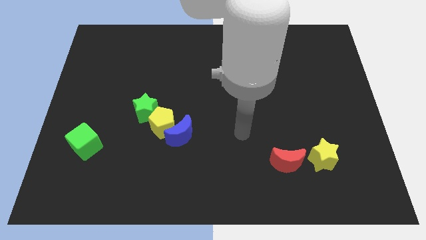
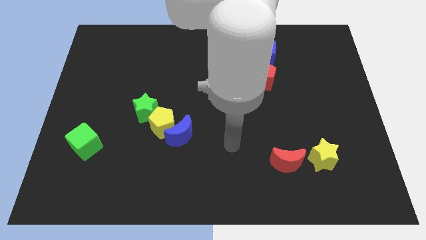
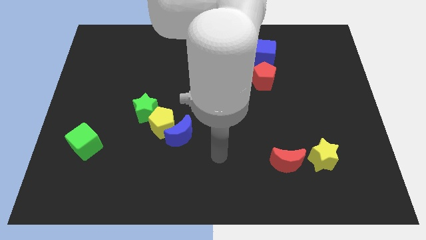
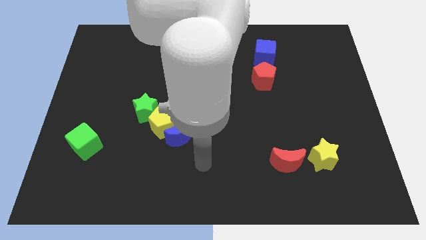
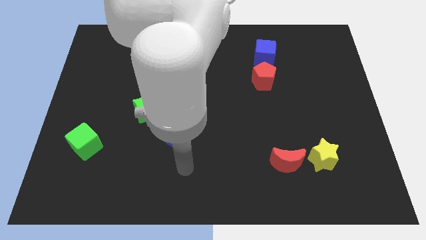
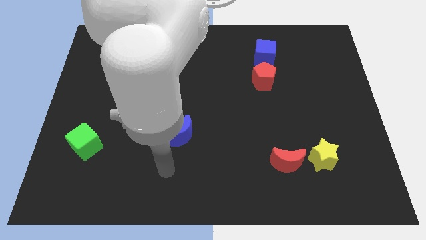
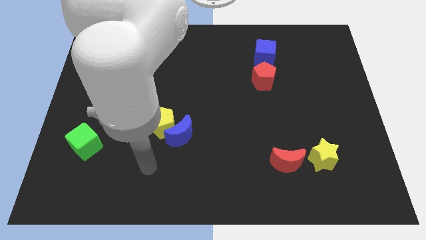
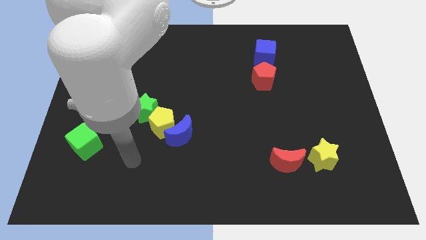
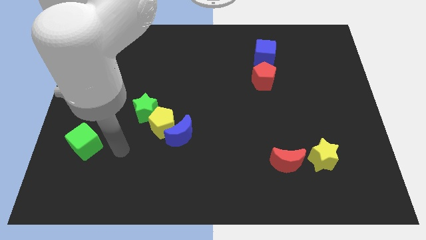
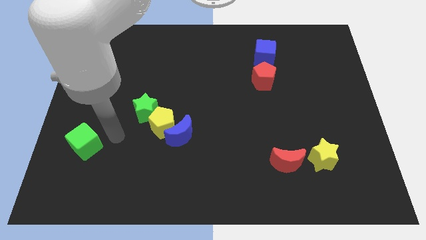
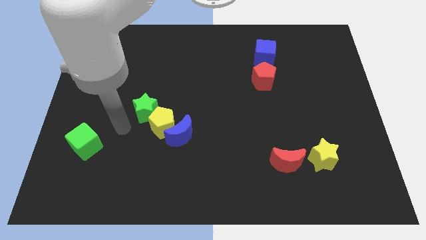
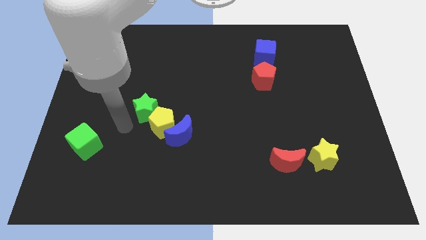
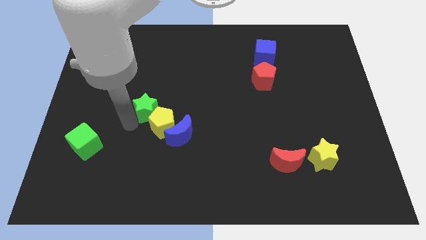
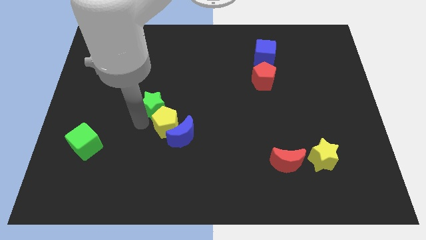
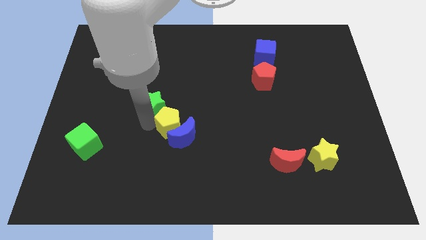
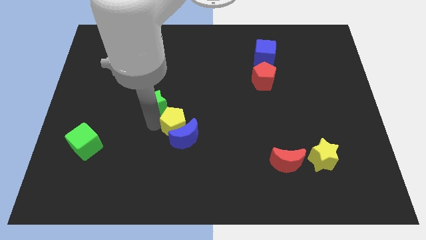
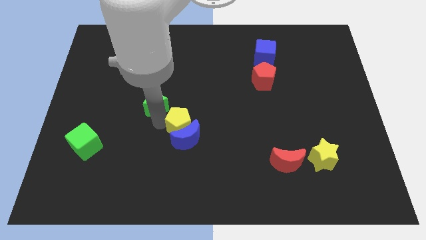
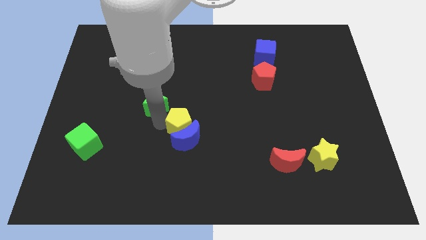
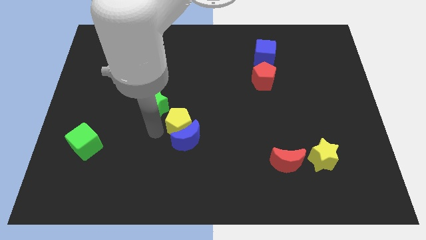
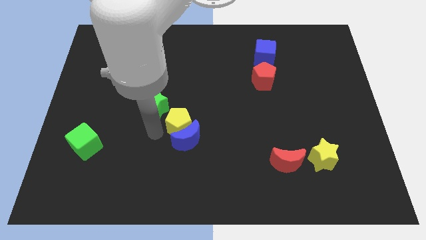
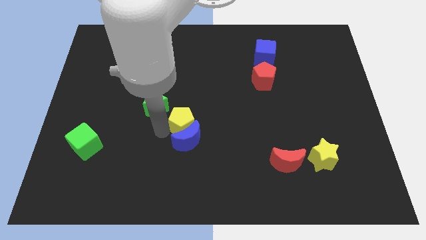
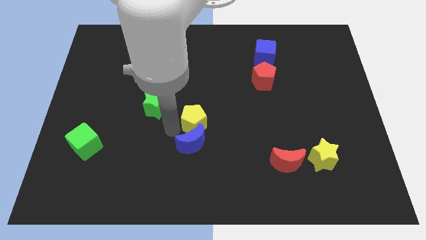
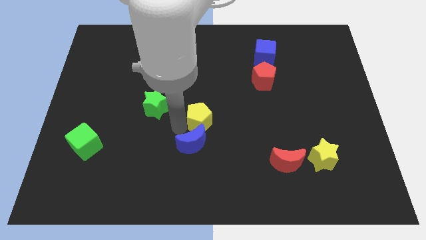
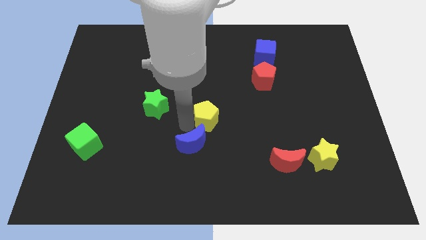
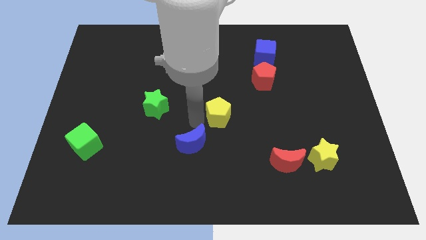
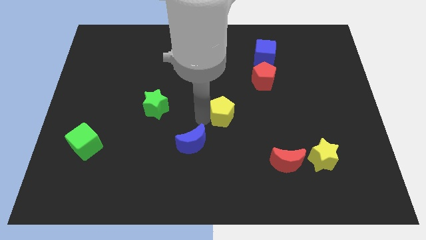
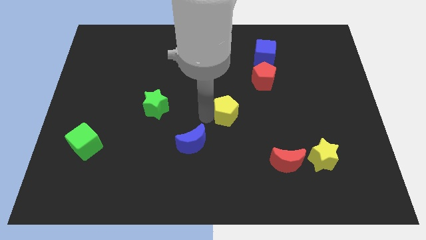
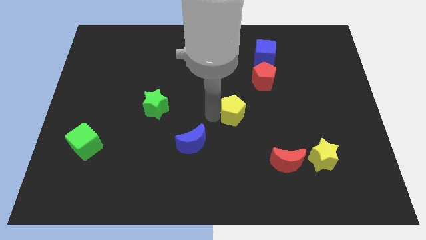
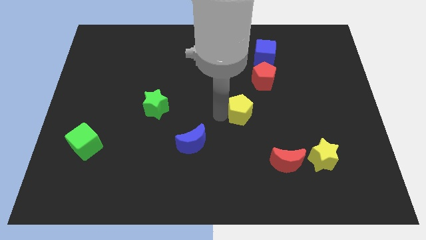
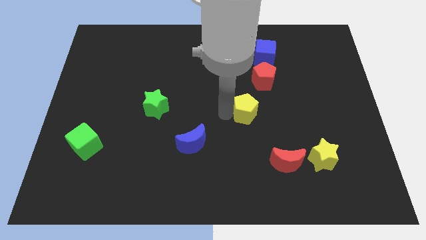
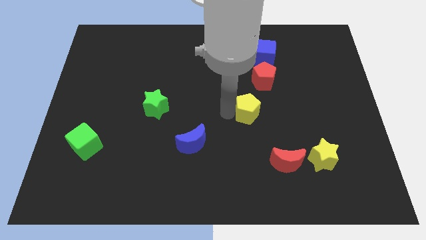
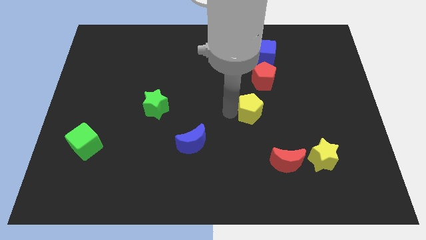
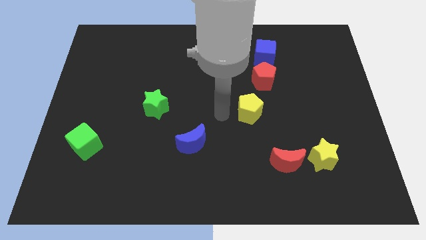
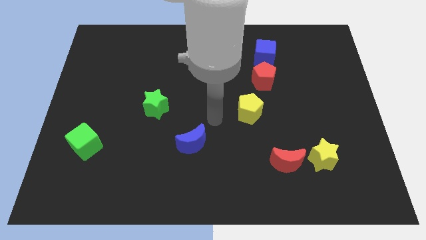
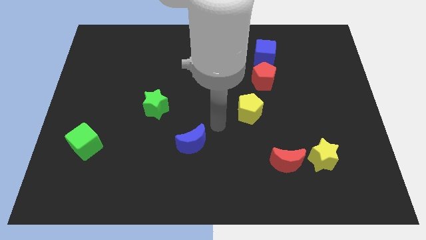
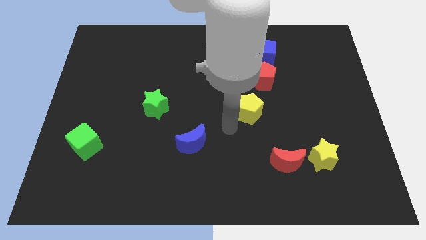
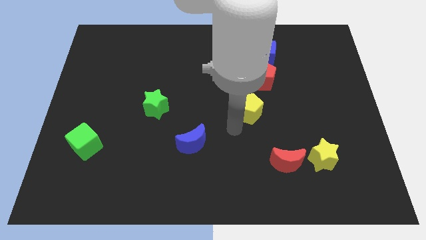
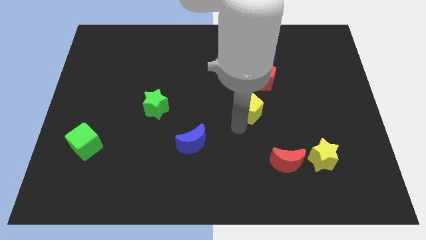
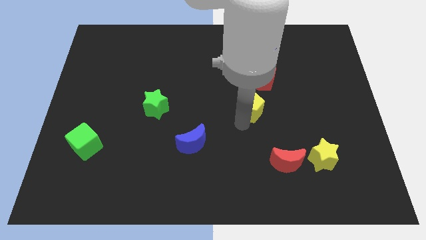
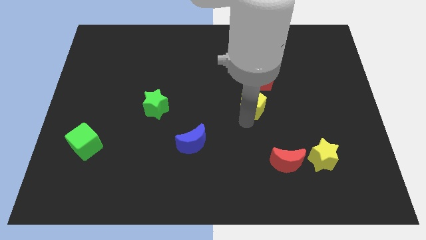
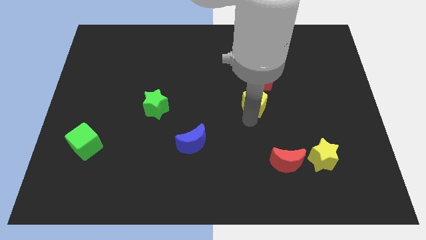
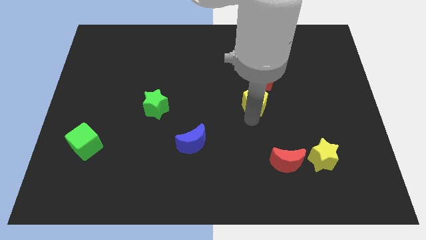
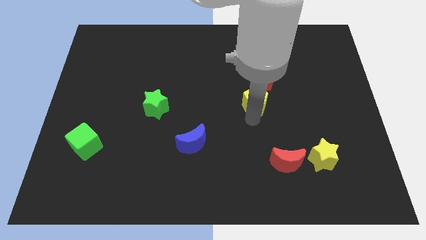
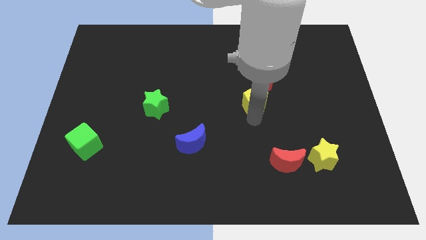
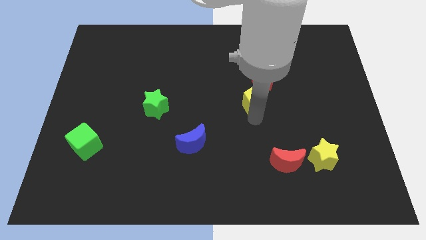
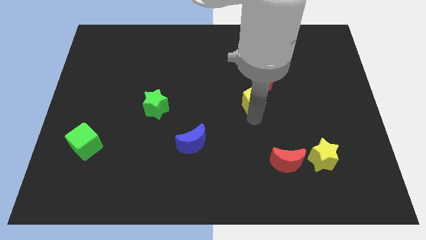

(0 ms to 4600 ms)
separate the yellow pentagon from the green star and blue moon

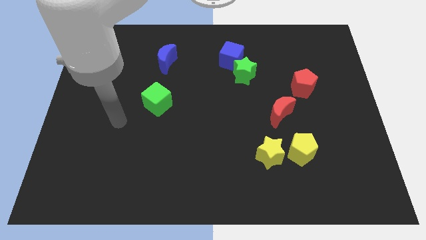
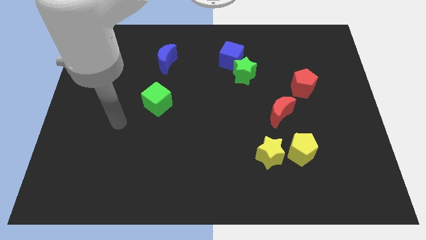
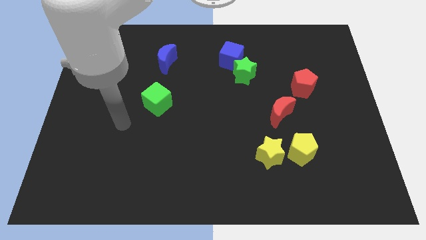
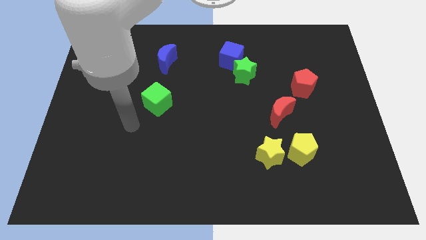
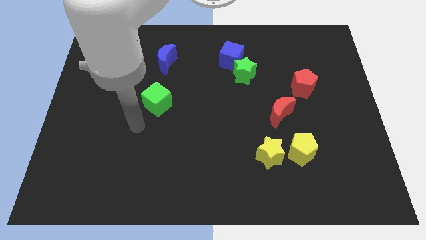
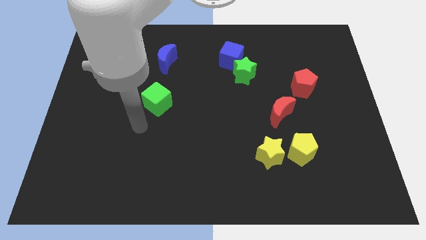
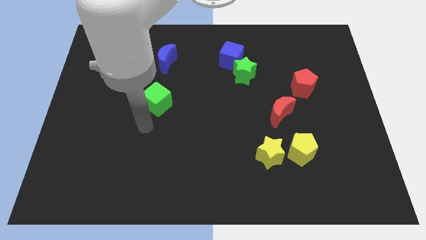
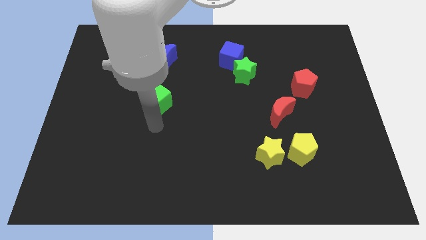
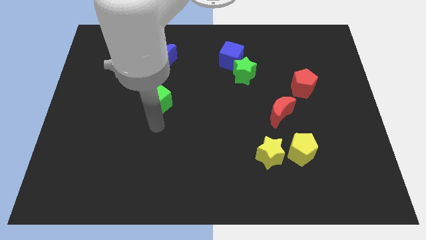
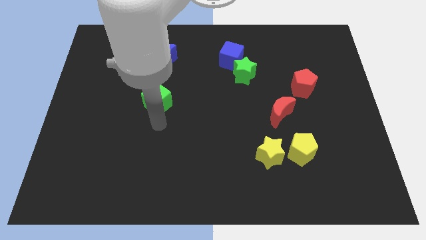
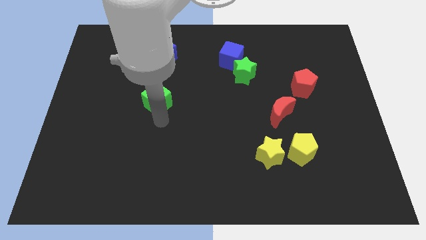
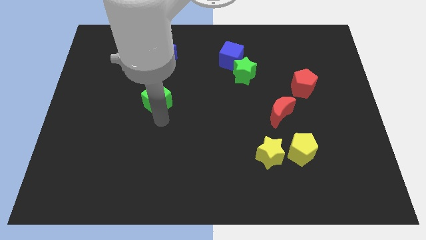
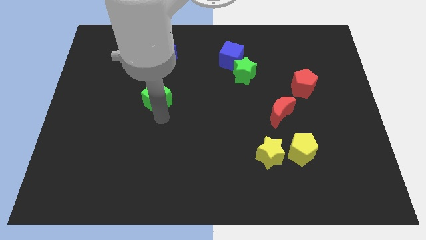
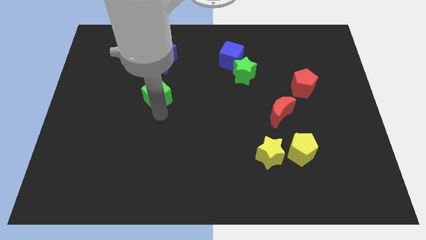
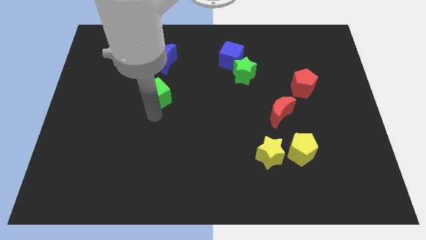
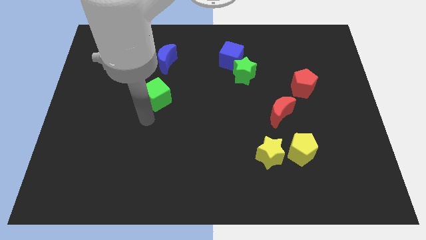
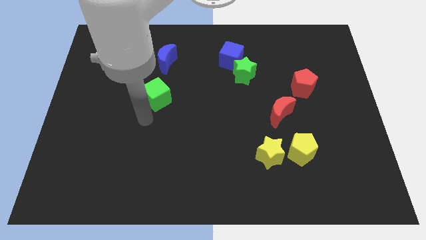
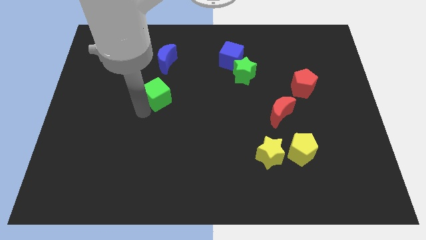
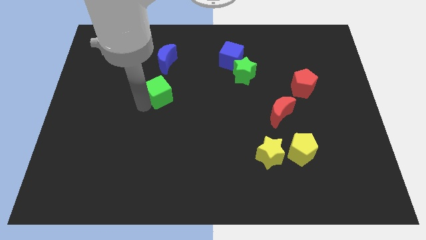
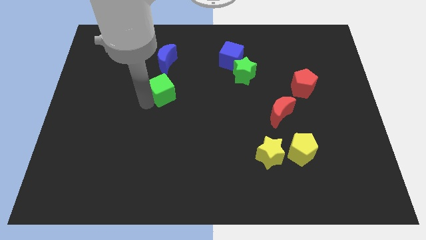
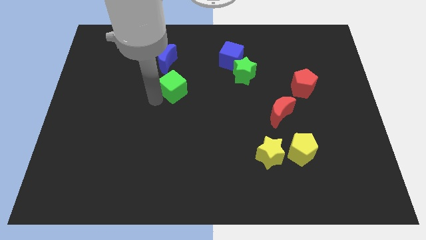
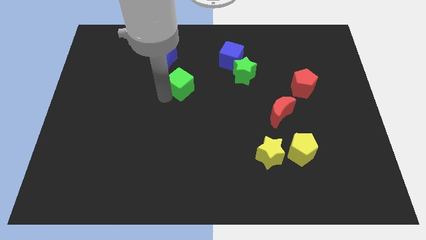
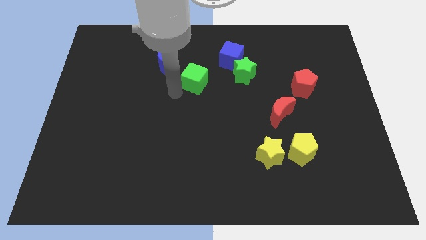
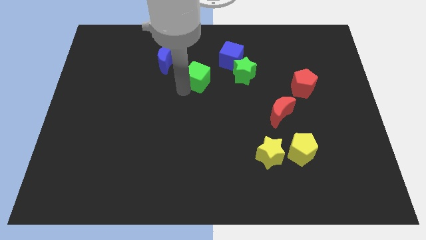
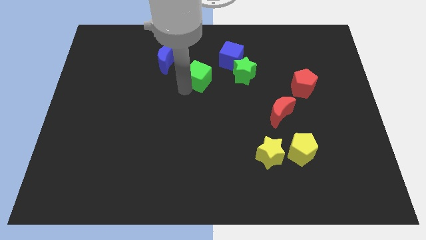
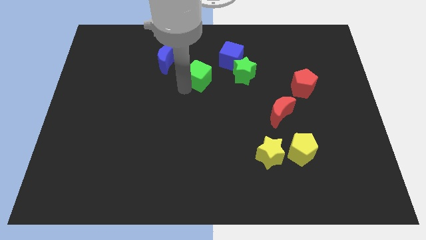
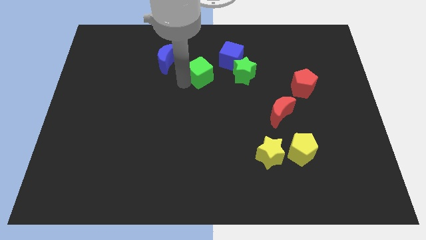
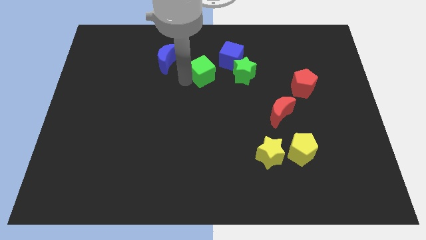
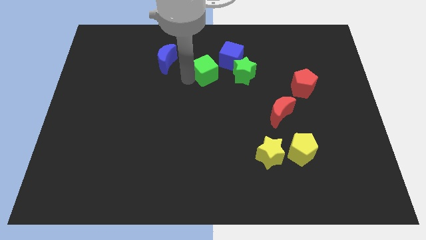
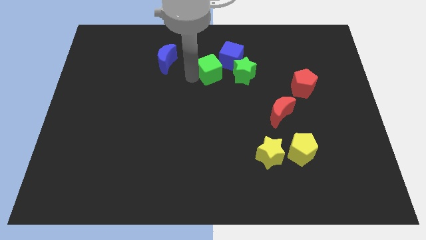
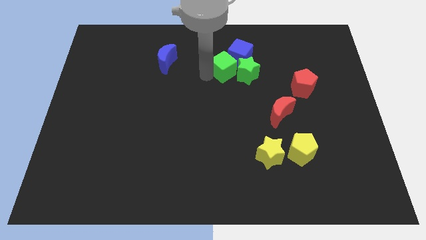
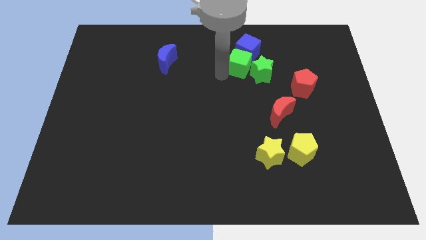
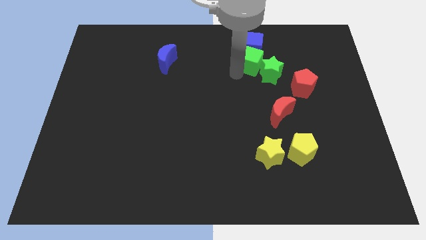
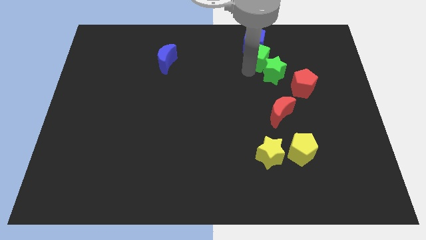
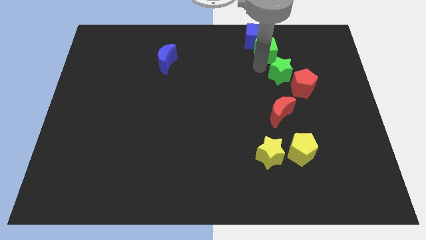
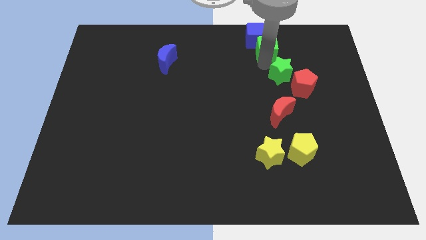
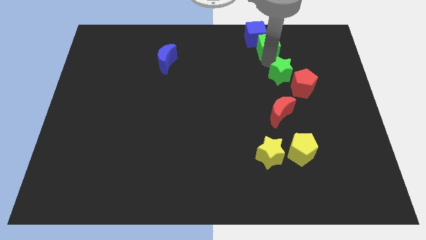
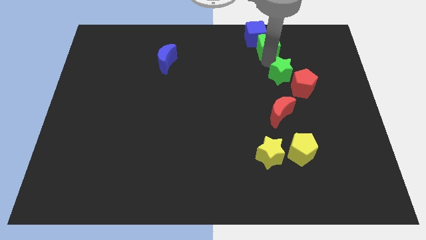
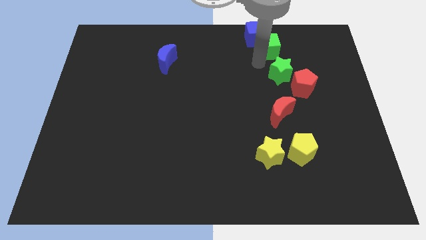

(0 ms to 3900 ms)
make the green cube to touch the bottom side of the blue cube

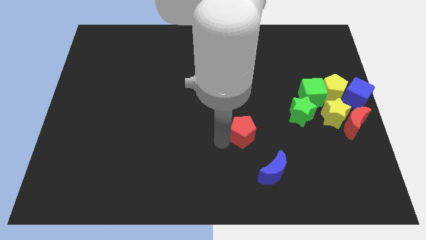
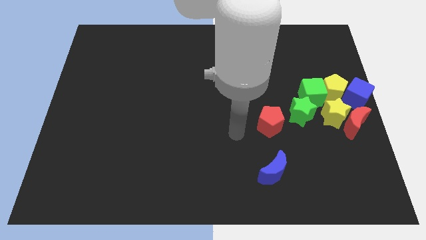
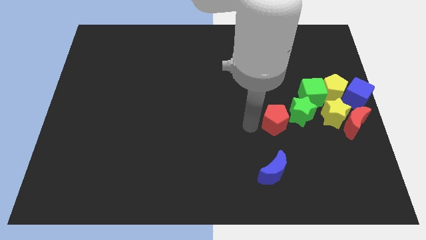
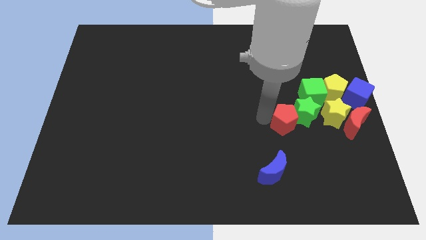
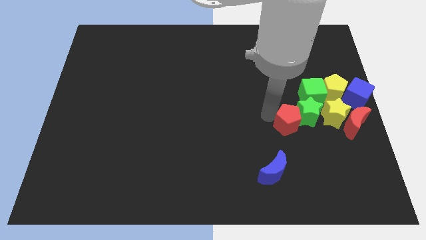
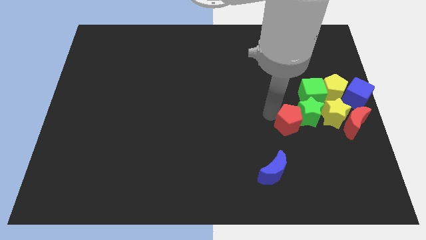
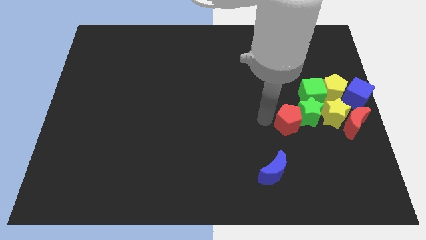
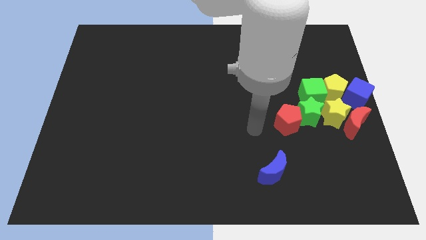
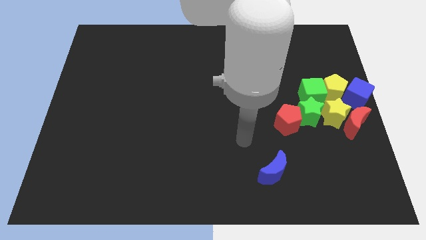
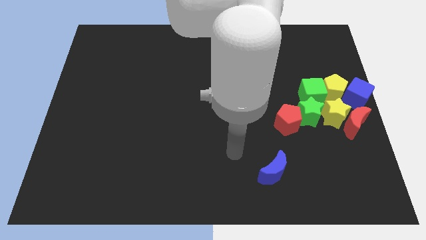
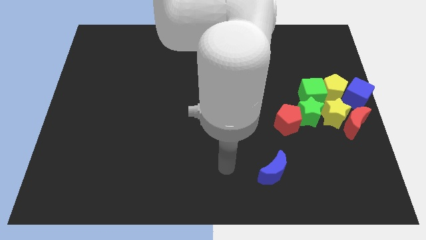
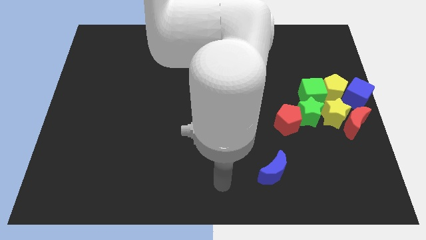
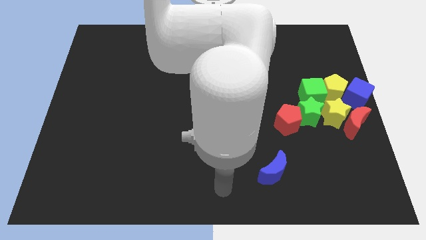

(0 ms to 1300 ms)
push the red pentagon left to the green star
